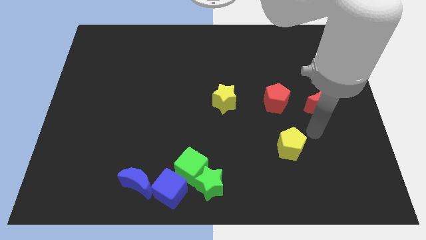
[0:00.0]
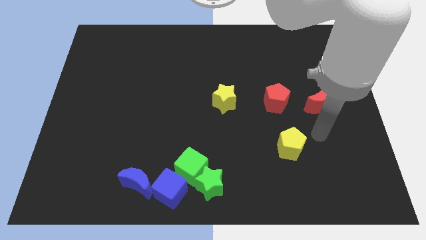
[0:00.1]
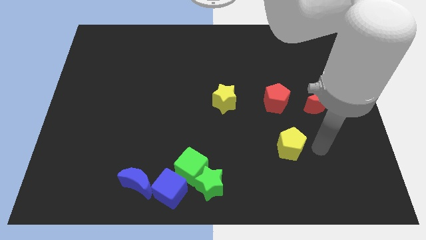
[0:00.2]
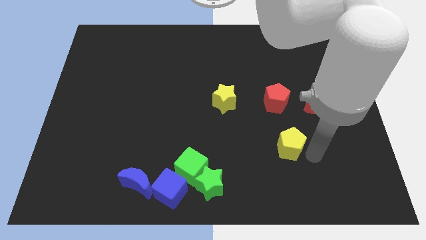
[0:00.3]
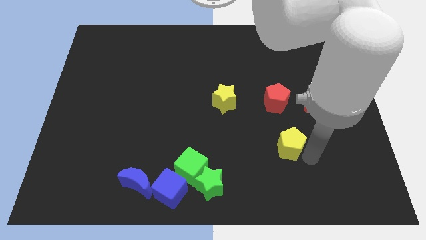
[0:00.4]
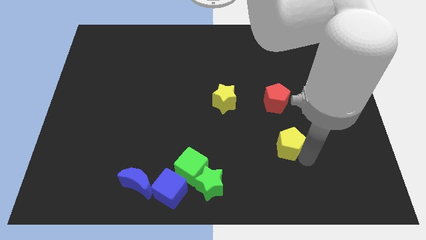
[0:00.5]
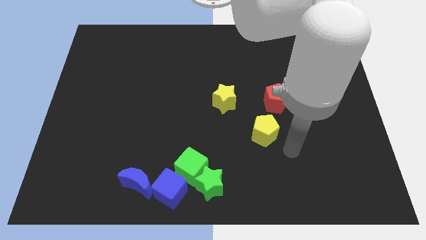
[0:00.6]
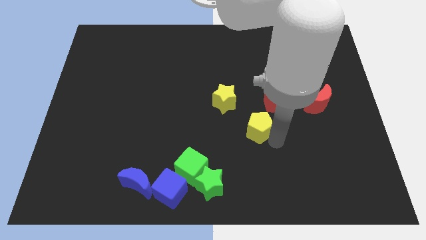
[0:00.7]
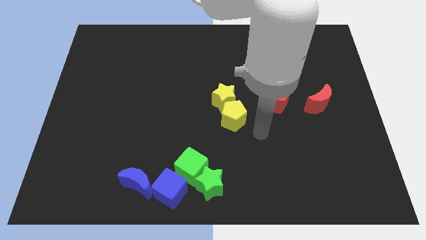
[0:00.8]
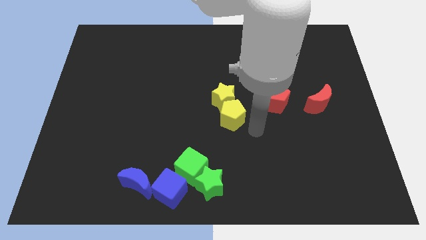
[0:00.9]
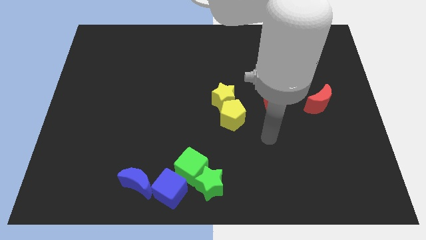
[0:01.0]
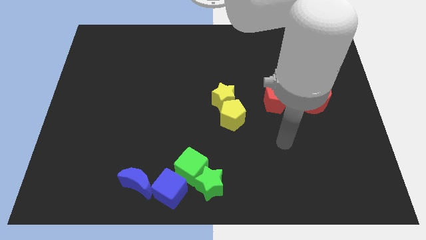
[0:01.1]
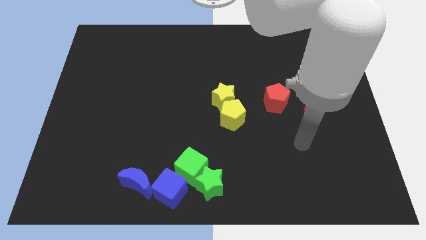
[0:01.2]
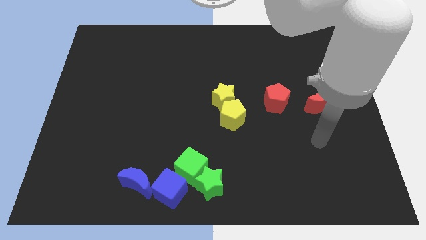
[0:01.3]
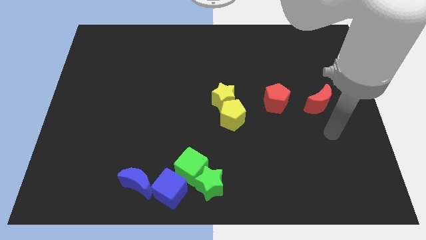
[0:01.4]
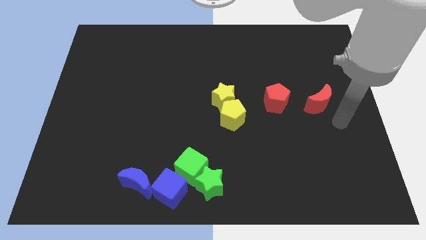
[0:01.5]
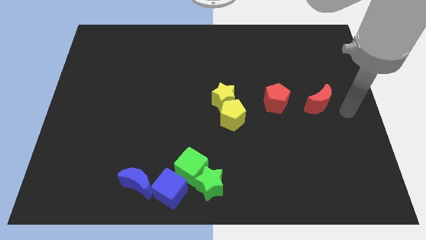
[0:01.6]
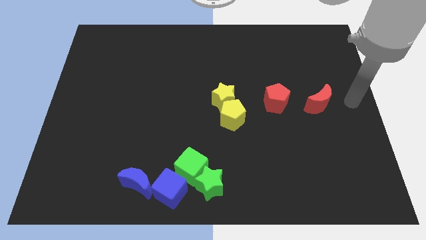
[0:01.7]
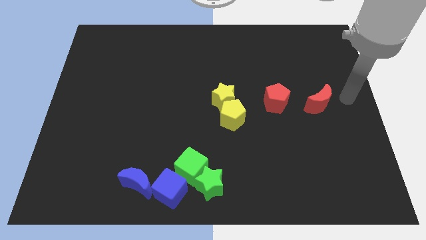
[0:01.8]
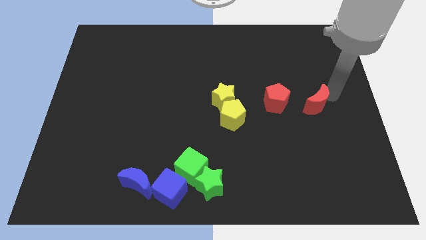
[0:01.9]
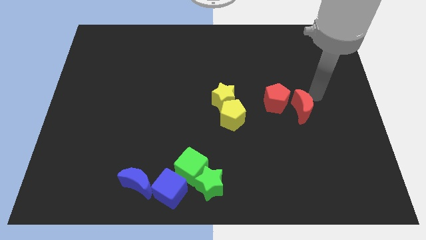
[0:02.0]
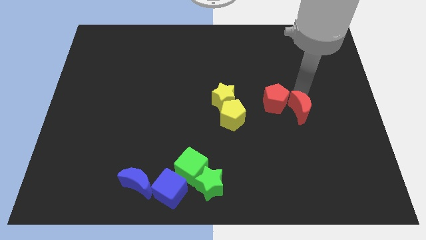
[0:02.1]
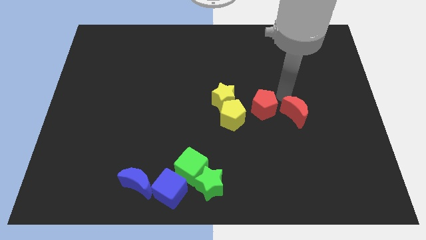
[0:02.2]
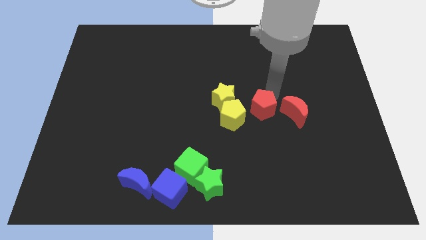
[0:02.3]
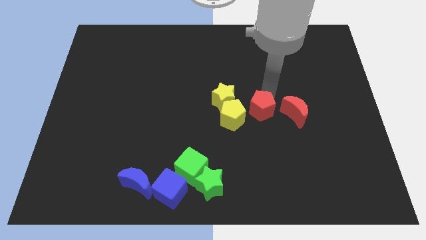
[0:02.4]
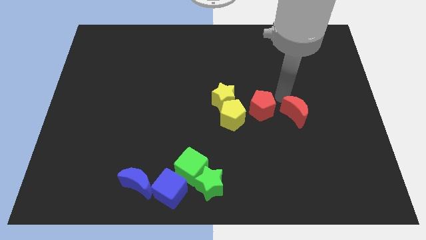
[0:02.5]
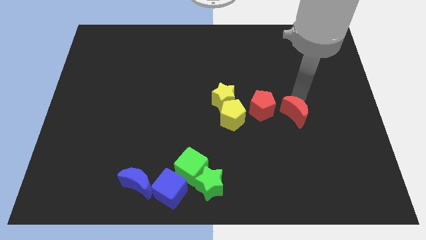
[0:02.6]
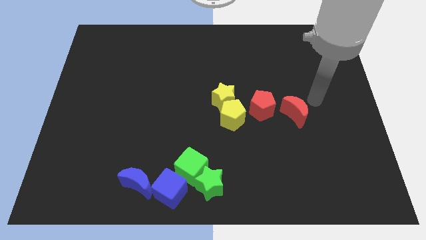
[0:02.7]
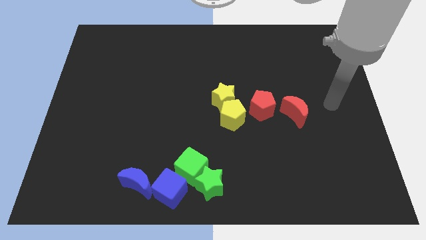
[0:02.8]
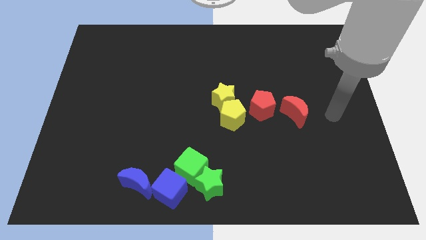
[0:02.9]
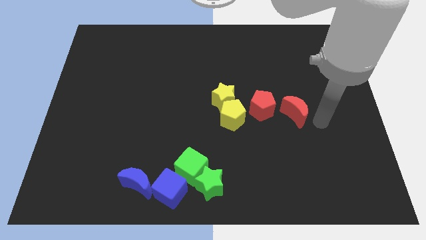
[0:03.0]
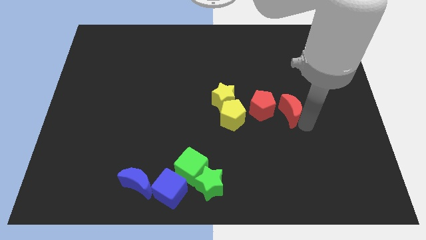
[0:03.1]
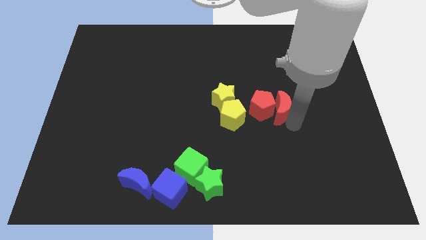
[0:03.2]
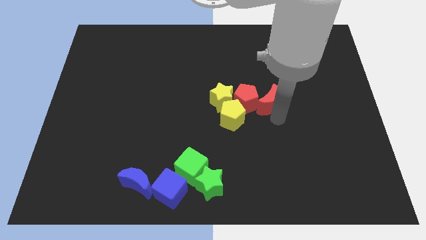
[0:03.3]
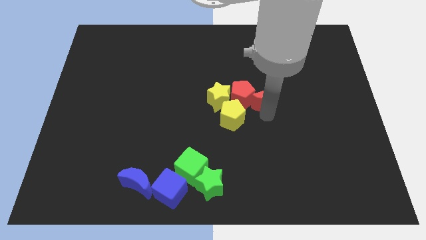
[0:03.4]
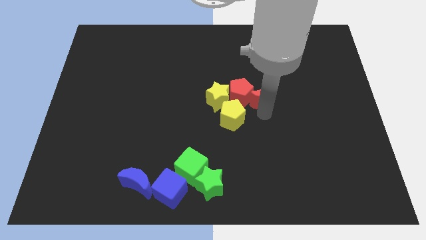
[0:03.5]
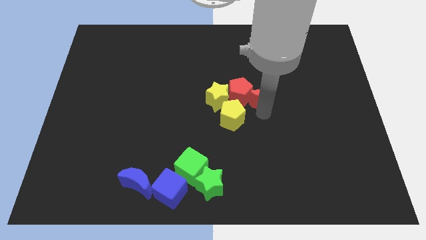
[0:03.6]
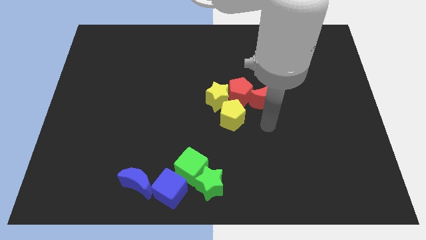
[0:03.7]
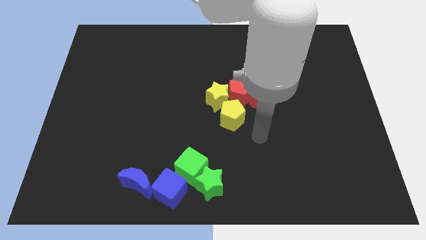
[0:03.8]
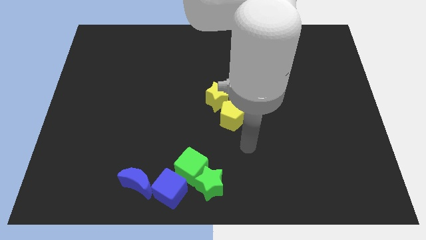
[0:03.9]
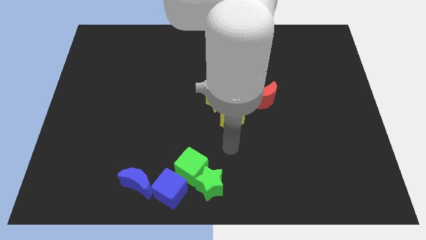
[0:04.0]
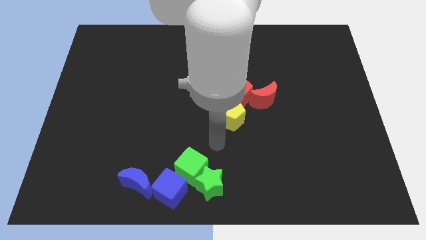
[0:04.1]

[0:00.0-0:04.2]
push the yellow and red blocks together to form a group

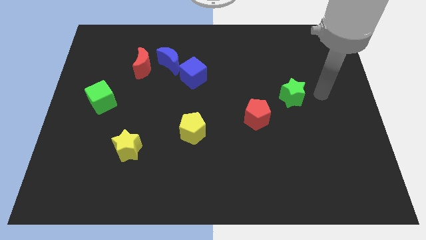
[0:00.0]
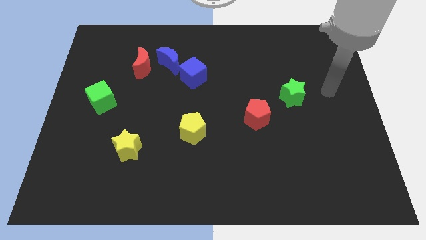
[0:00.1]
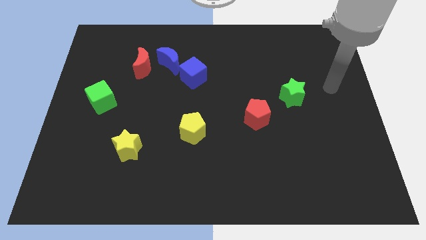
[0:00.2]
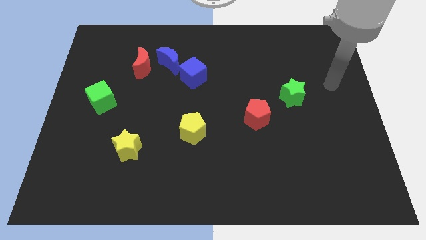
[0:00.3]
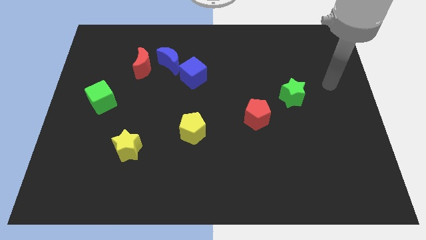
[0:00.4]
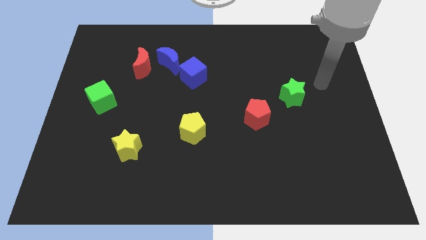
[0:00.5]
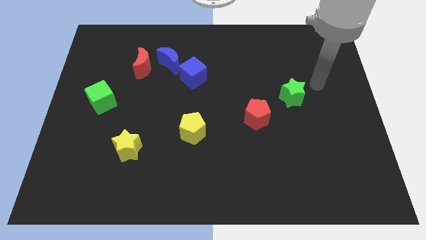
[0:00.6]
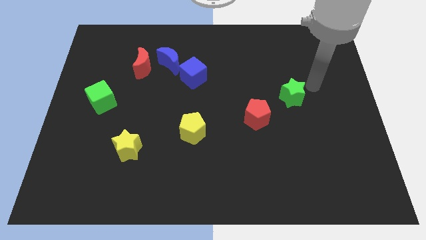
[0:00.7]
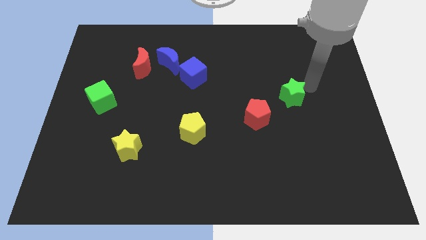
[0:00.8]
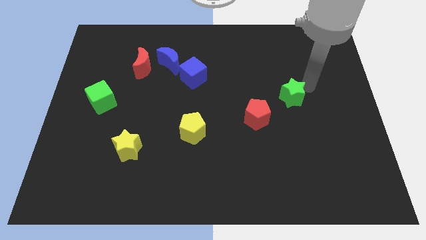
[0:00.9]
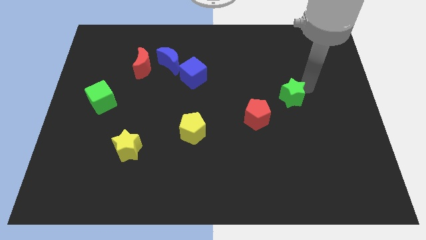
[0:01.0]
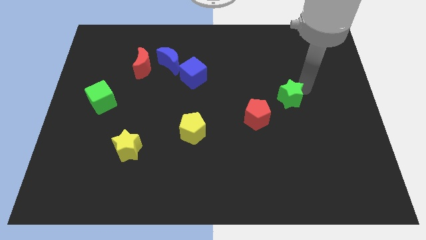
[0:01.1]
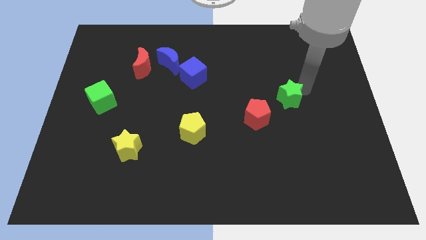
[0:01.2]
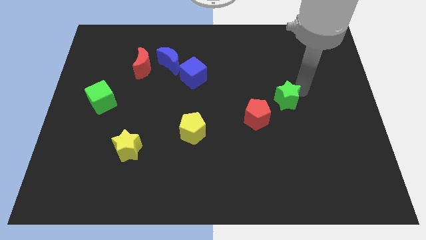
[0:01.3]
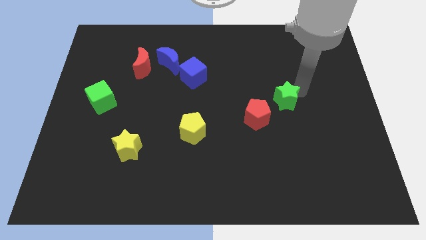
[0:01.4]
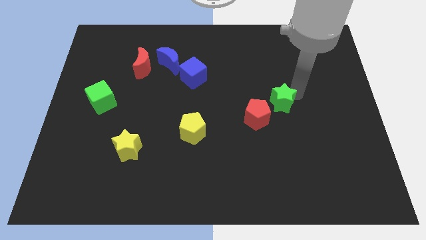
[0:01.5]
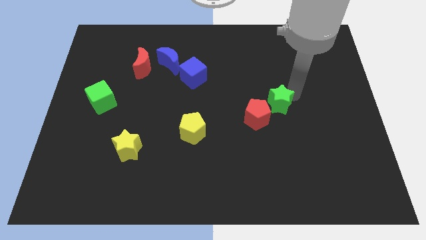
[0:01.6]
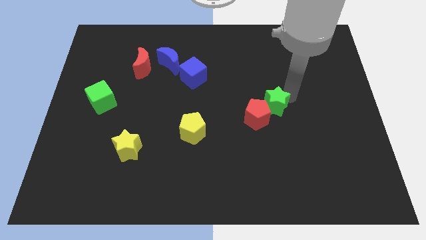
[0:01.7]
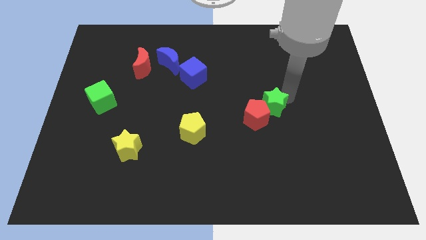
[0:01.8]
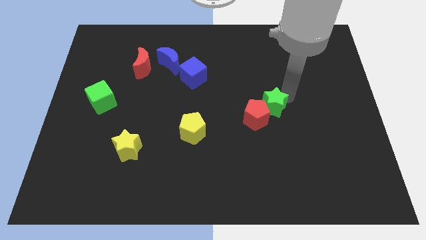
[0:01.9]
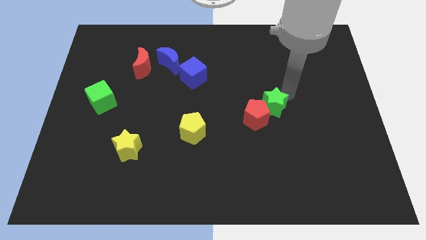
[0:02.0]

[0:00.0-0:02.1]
push green star into red pentagon

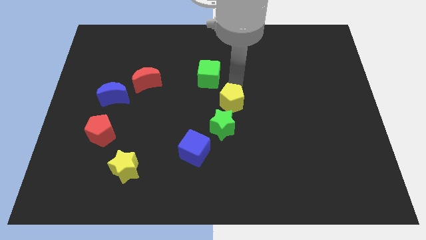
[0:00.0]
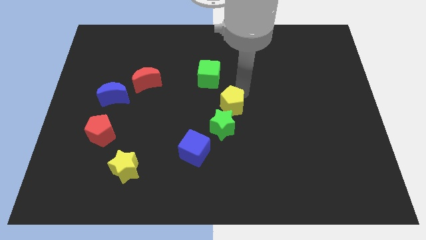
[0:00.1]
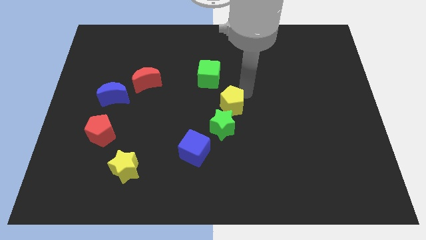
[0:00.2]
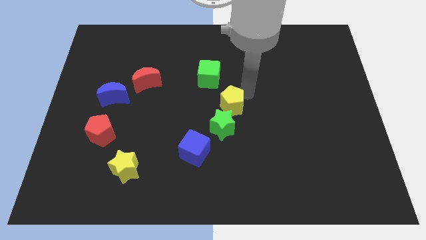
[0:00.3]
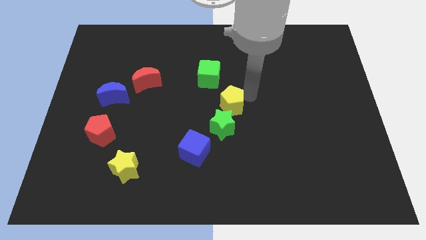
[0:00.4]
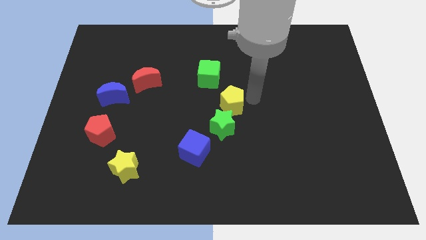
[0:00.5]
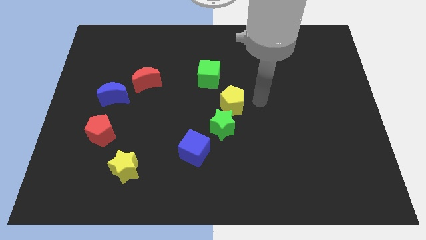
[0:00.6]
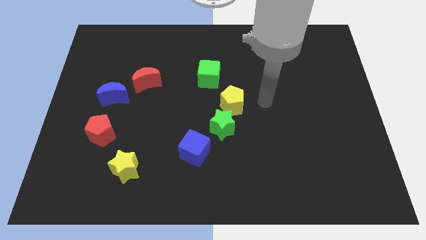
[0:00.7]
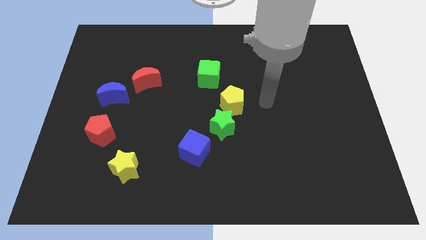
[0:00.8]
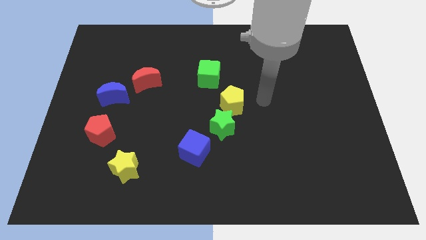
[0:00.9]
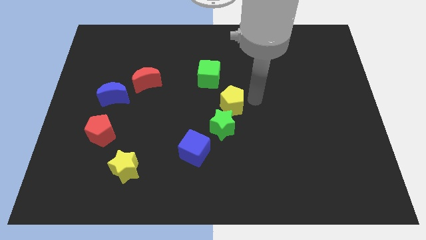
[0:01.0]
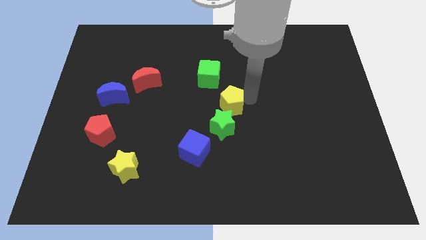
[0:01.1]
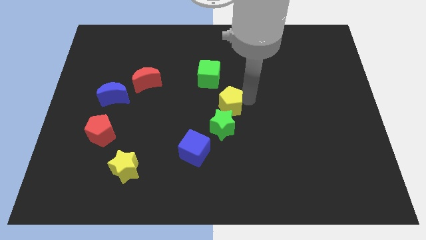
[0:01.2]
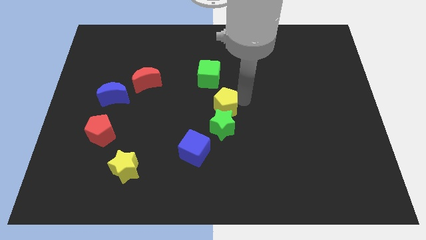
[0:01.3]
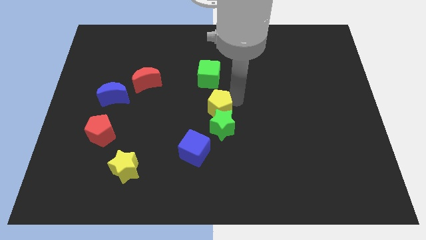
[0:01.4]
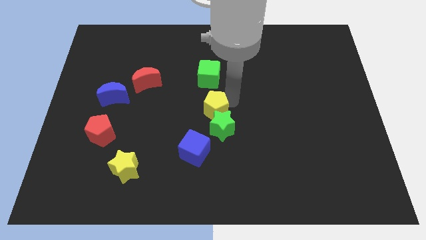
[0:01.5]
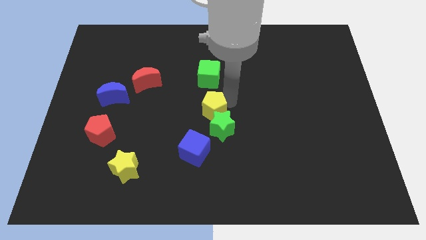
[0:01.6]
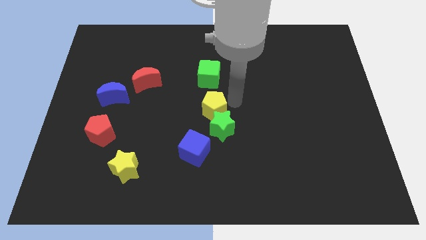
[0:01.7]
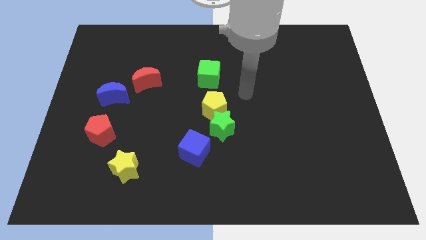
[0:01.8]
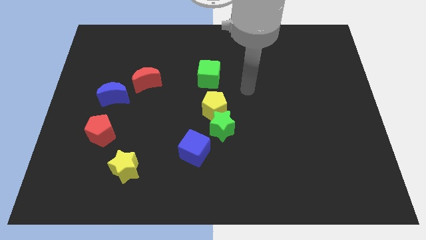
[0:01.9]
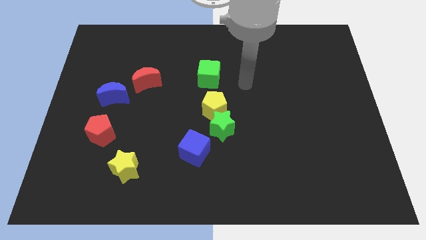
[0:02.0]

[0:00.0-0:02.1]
push the yellow pentagon into the green star

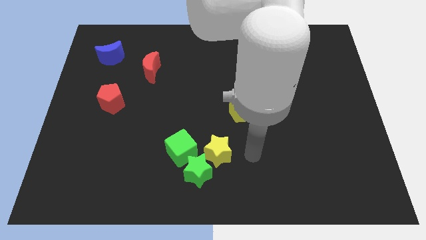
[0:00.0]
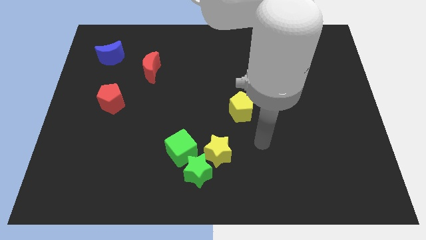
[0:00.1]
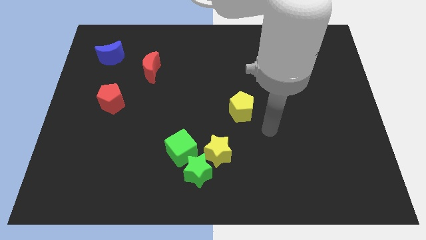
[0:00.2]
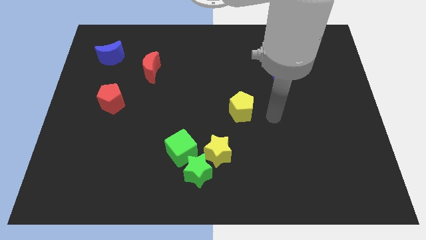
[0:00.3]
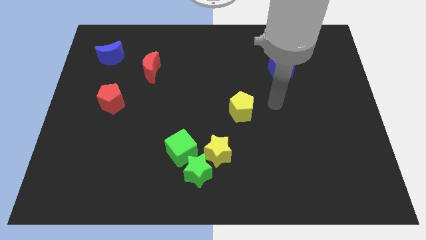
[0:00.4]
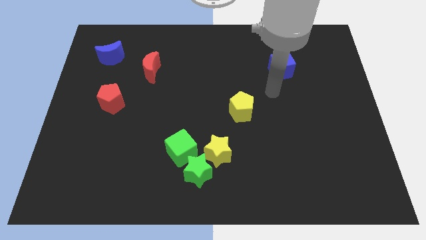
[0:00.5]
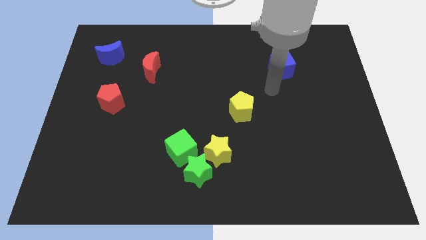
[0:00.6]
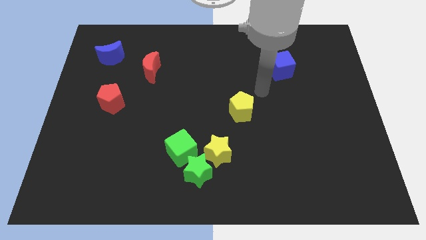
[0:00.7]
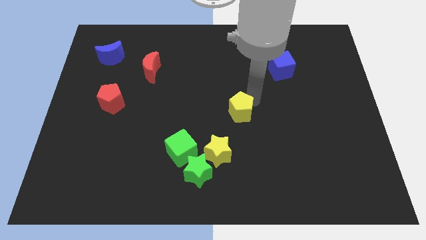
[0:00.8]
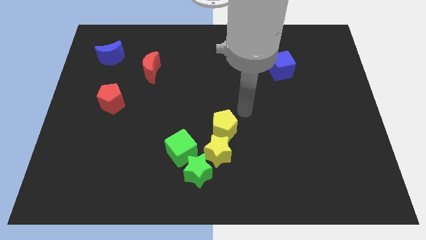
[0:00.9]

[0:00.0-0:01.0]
place the yellow pentagon above the yellow star
